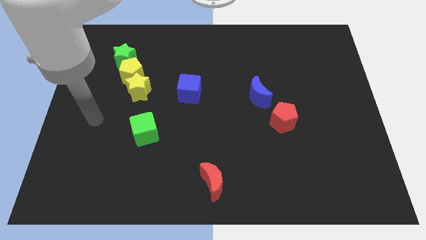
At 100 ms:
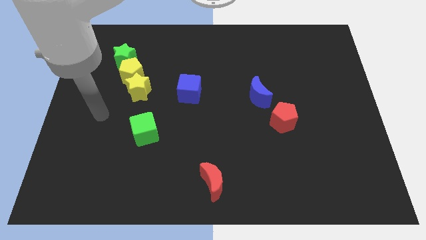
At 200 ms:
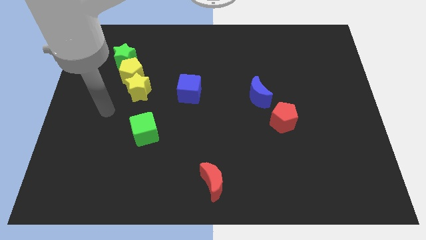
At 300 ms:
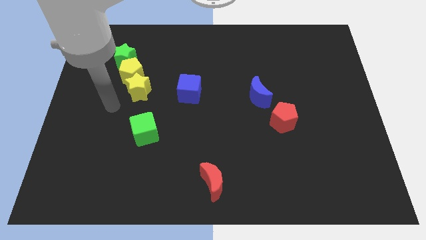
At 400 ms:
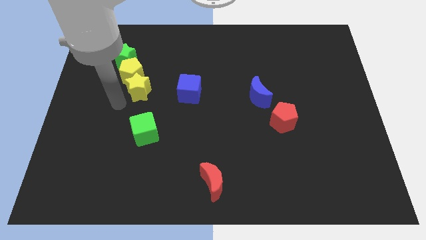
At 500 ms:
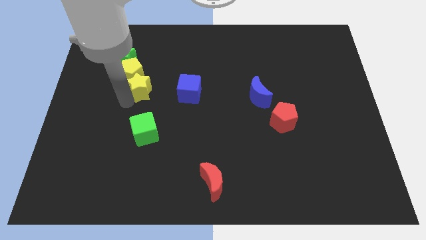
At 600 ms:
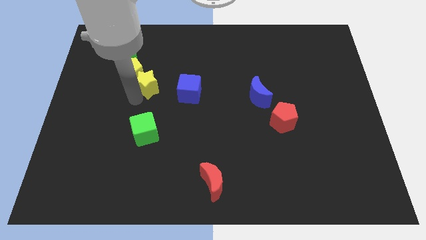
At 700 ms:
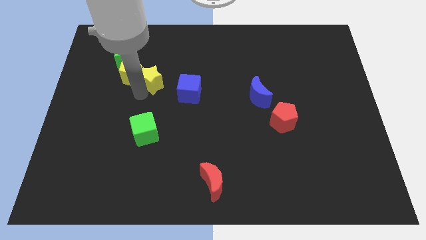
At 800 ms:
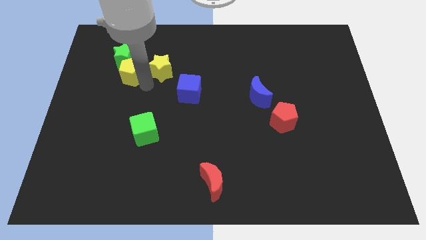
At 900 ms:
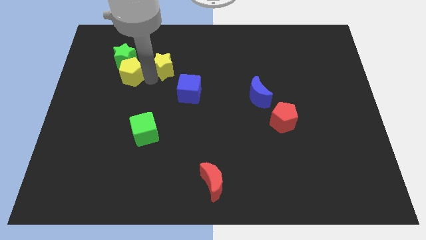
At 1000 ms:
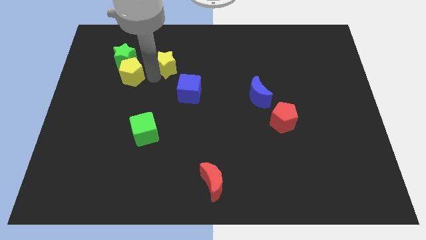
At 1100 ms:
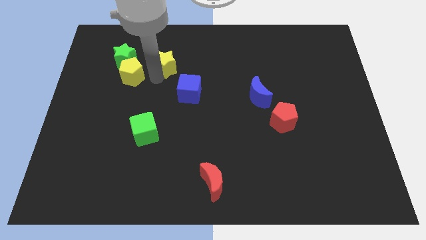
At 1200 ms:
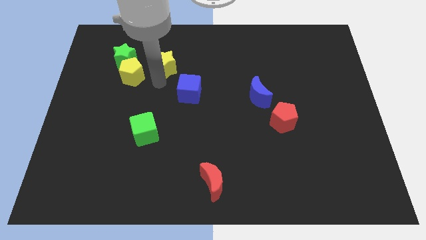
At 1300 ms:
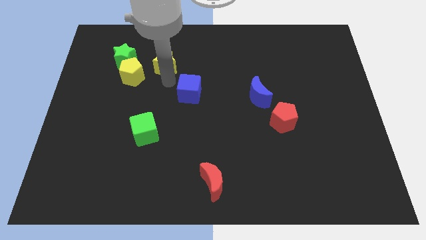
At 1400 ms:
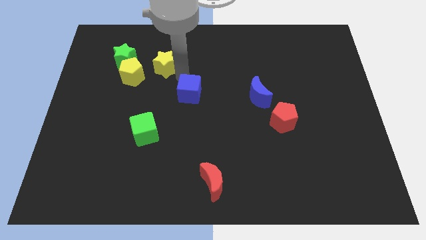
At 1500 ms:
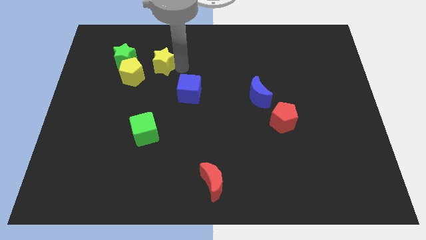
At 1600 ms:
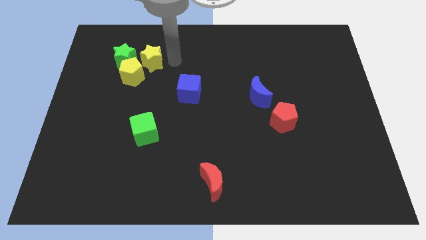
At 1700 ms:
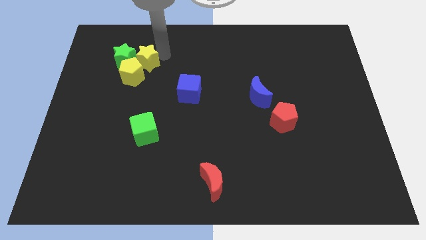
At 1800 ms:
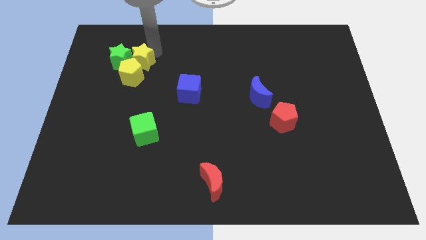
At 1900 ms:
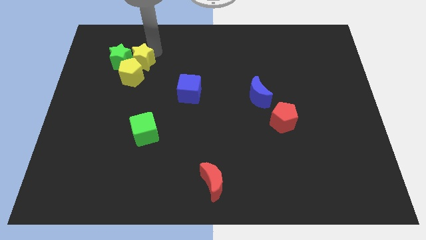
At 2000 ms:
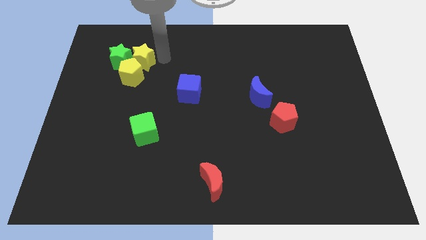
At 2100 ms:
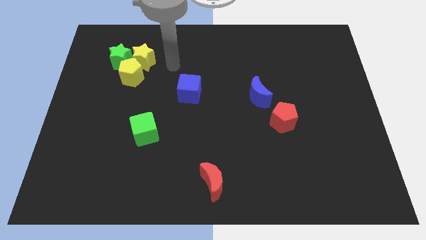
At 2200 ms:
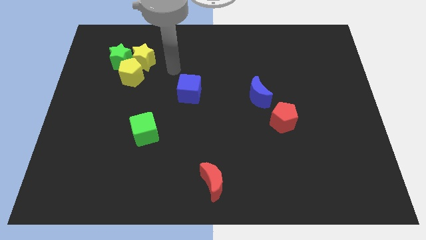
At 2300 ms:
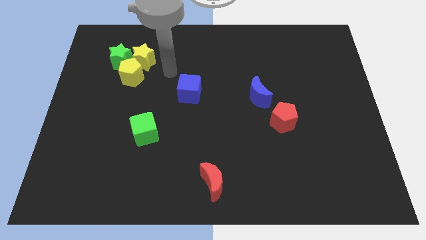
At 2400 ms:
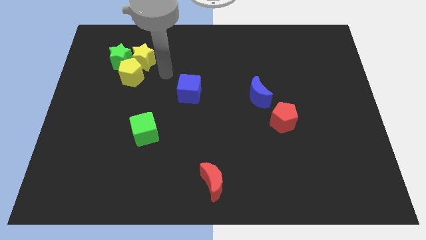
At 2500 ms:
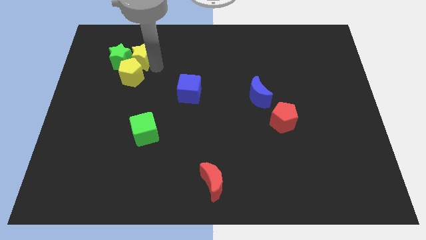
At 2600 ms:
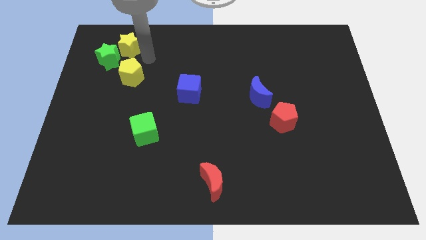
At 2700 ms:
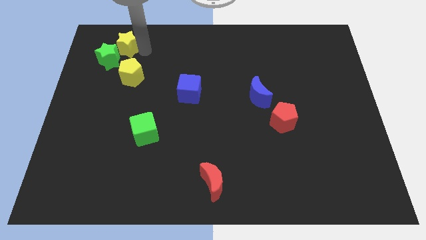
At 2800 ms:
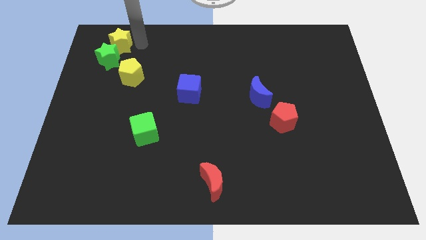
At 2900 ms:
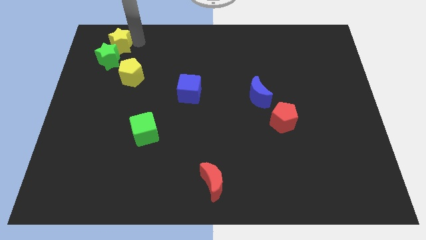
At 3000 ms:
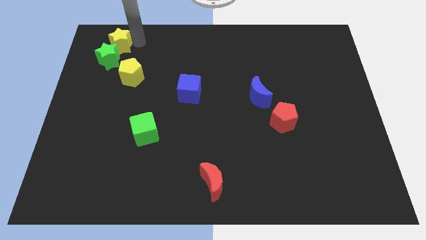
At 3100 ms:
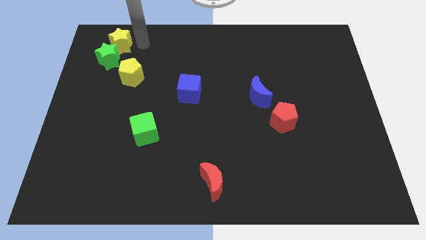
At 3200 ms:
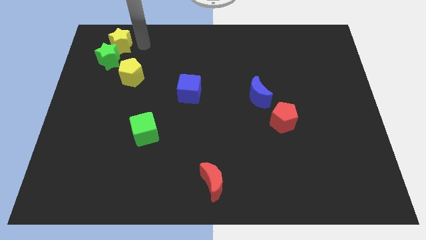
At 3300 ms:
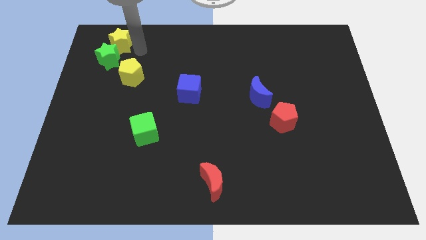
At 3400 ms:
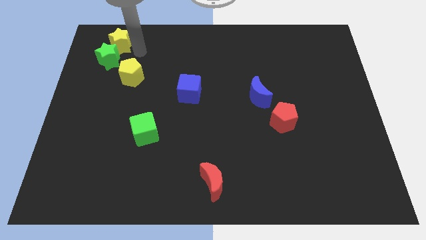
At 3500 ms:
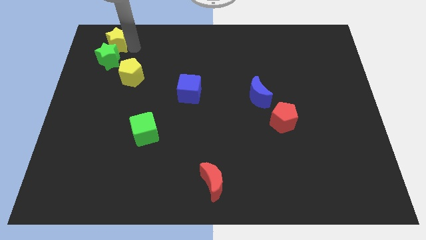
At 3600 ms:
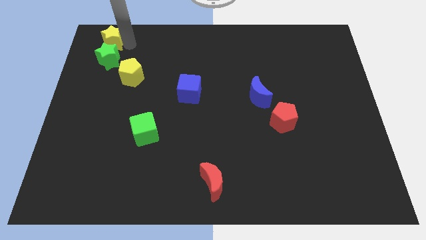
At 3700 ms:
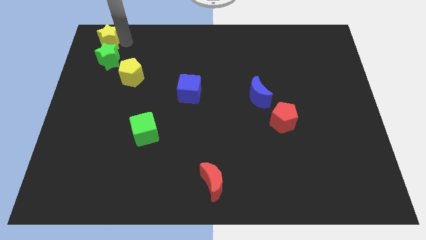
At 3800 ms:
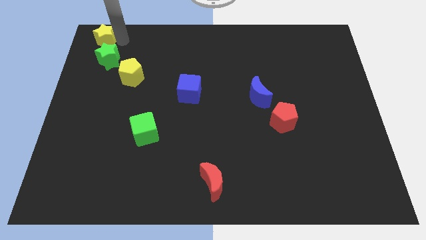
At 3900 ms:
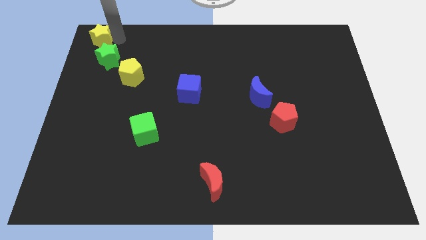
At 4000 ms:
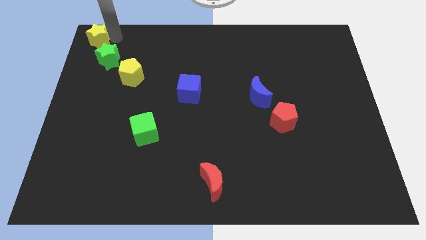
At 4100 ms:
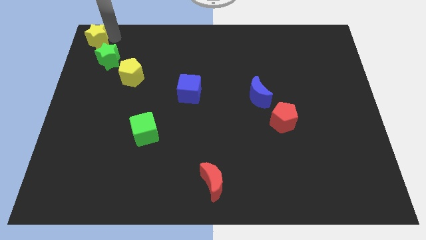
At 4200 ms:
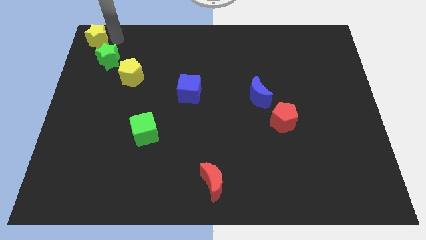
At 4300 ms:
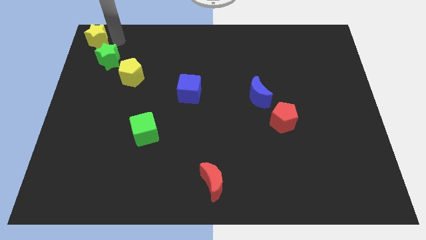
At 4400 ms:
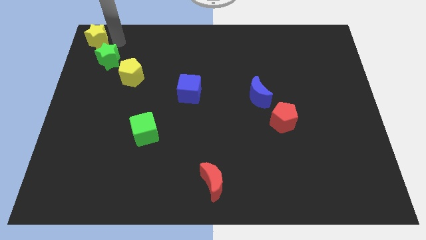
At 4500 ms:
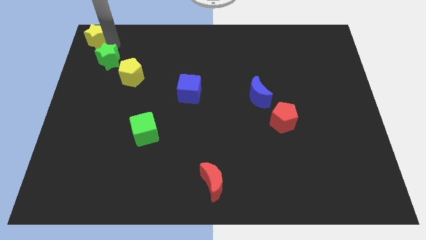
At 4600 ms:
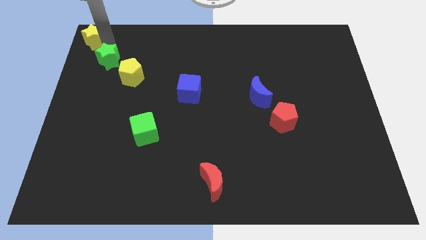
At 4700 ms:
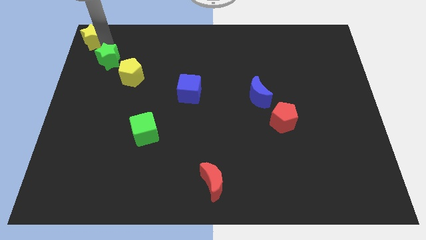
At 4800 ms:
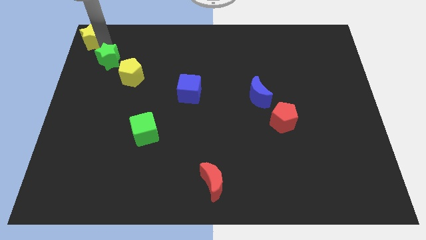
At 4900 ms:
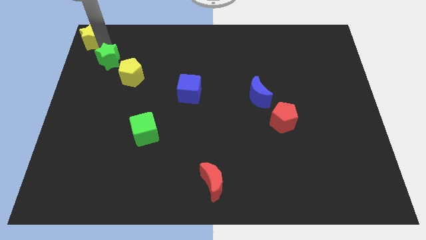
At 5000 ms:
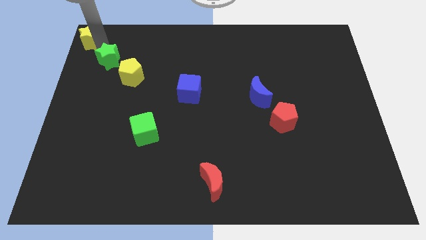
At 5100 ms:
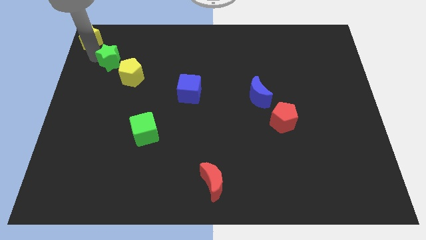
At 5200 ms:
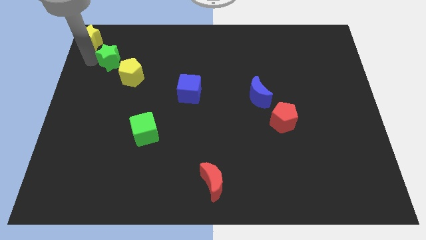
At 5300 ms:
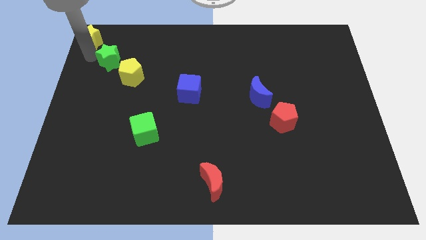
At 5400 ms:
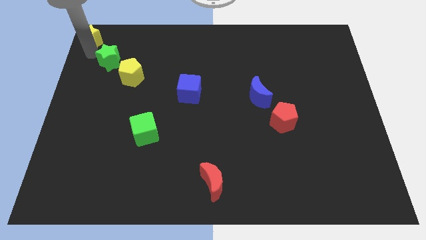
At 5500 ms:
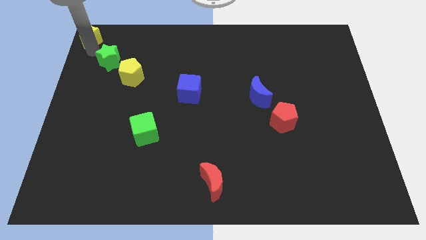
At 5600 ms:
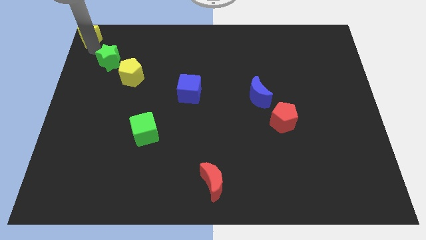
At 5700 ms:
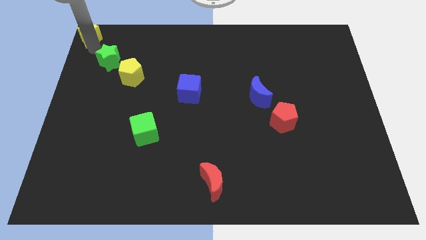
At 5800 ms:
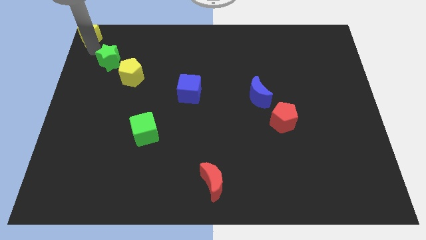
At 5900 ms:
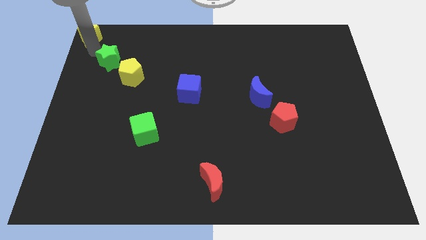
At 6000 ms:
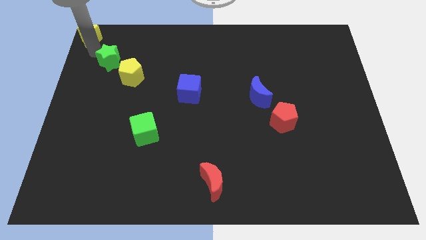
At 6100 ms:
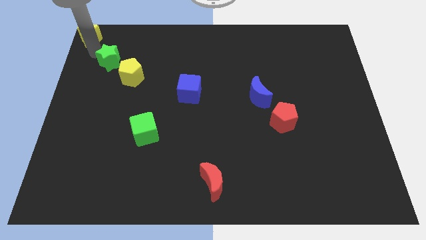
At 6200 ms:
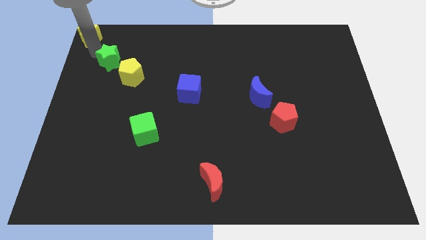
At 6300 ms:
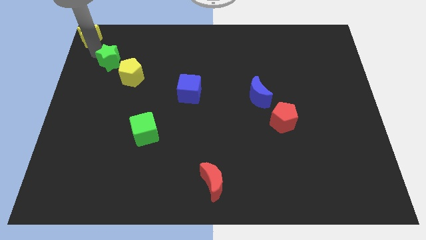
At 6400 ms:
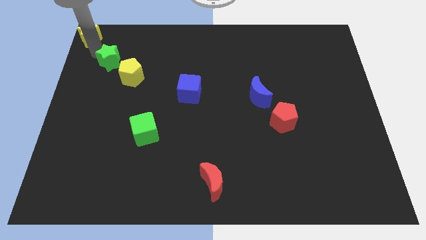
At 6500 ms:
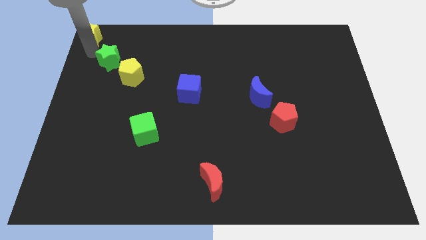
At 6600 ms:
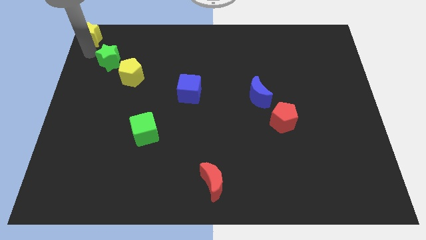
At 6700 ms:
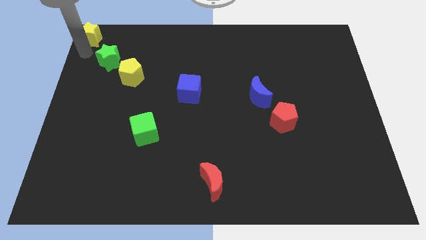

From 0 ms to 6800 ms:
push the yellow star towards the top left corner of the board

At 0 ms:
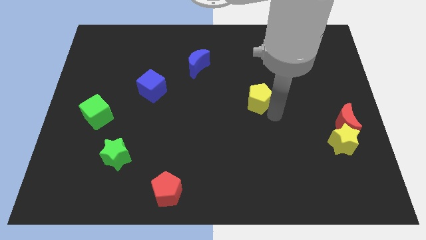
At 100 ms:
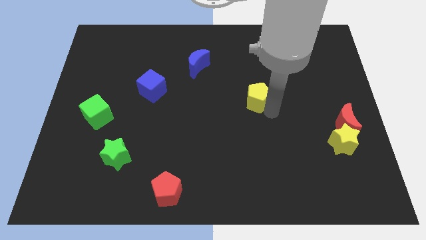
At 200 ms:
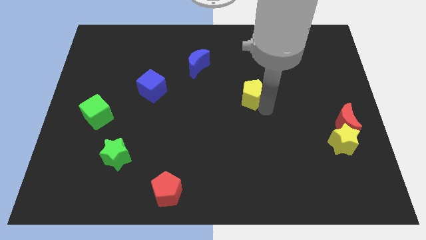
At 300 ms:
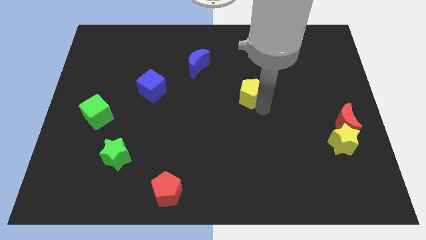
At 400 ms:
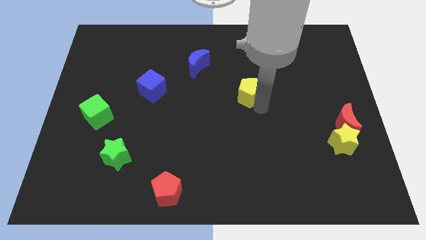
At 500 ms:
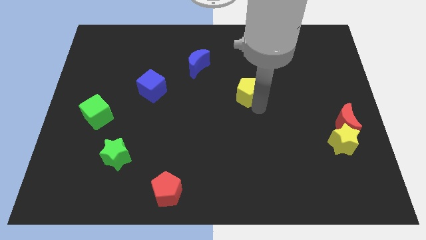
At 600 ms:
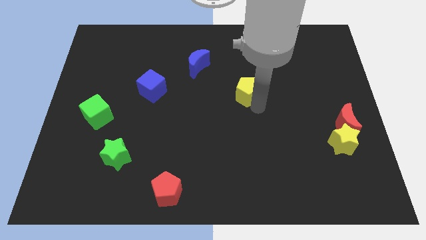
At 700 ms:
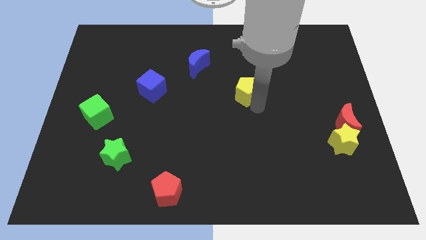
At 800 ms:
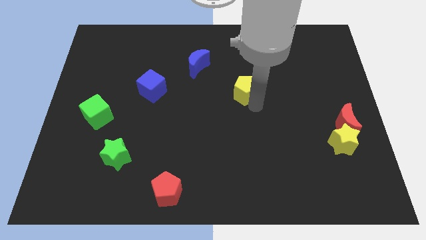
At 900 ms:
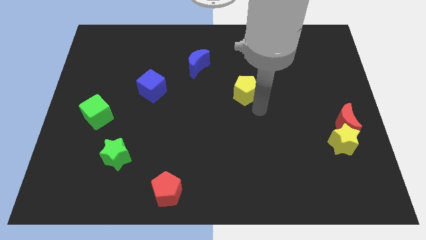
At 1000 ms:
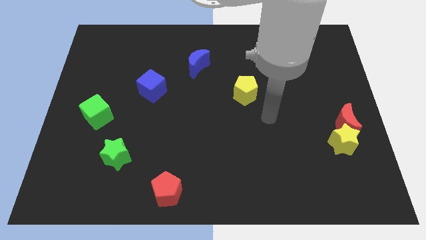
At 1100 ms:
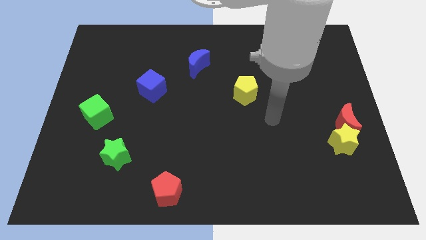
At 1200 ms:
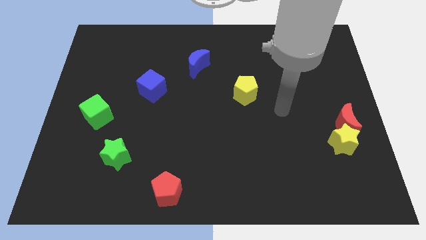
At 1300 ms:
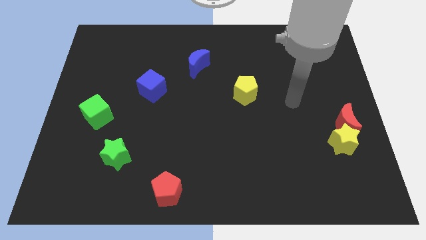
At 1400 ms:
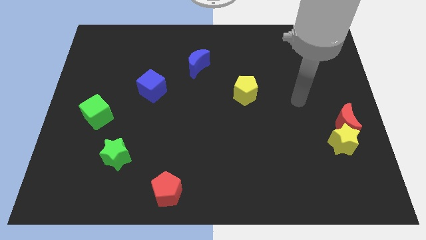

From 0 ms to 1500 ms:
slightly push the yellow pentagon to the top of the board

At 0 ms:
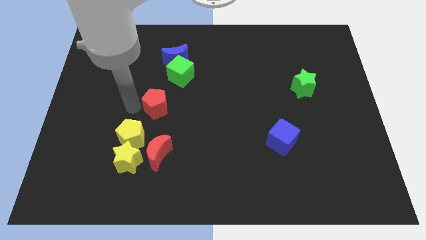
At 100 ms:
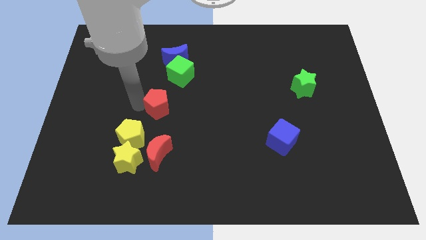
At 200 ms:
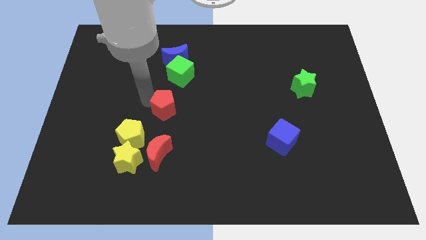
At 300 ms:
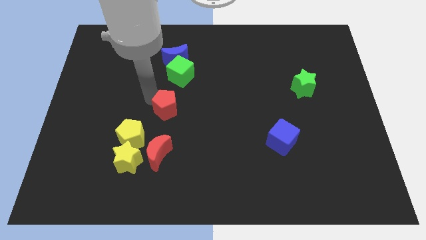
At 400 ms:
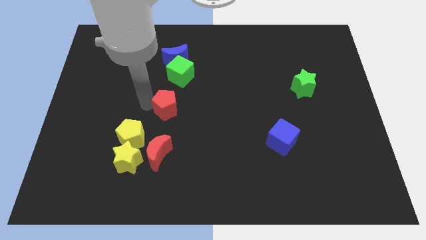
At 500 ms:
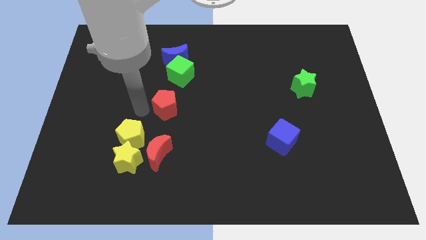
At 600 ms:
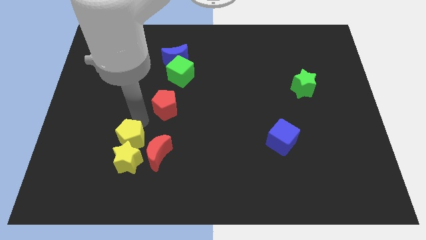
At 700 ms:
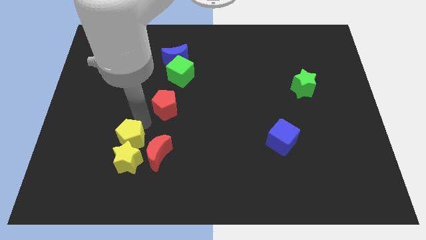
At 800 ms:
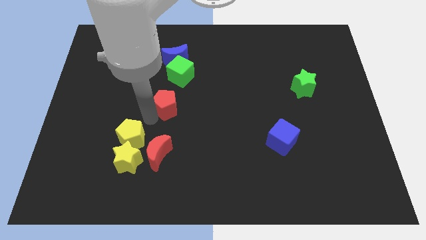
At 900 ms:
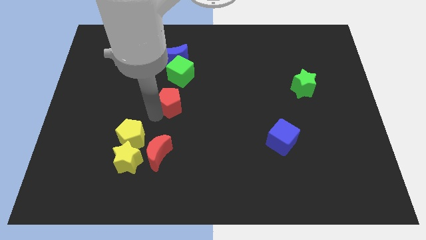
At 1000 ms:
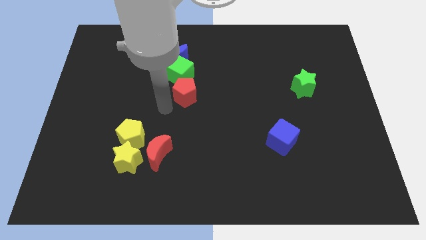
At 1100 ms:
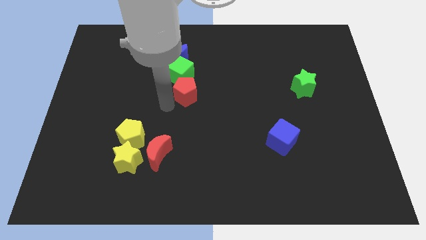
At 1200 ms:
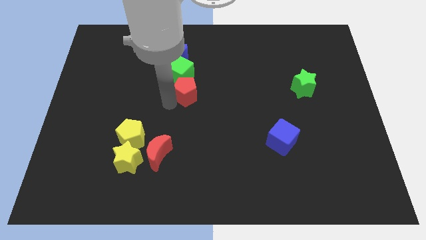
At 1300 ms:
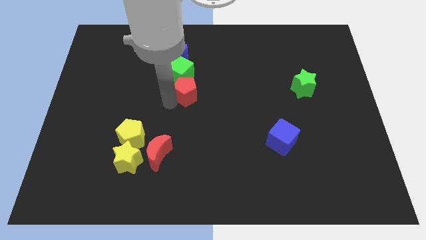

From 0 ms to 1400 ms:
place the red pentagon underneath the green cube
